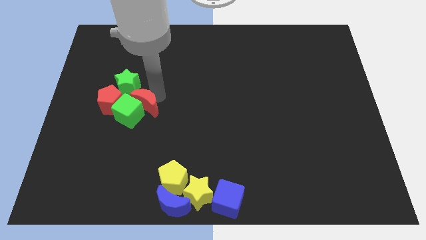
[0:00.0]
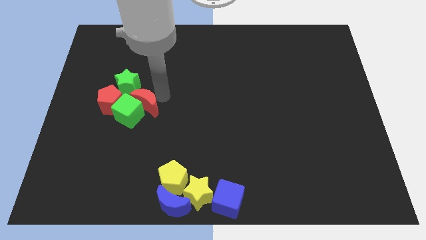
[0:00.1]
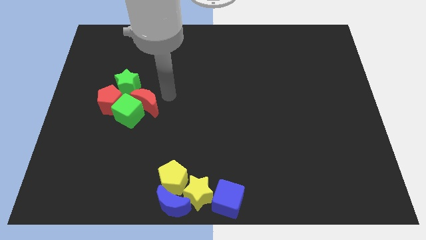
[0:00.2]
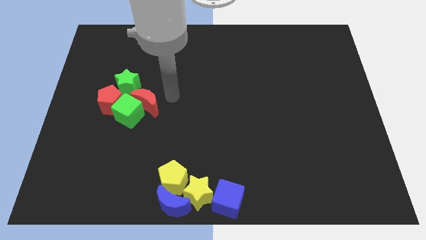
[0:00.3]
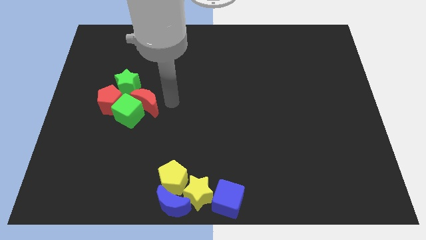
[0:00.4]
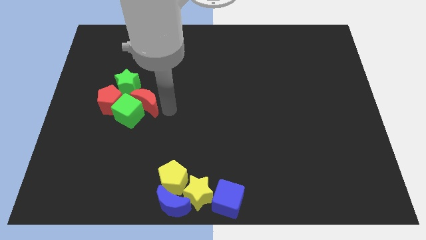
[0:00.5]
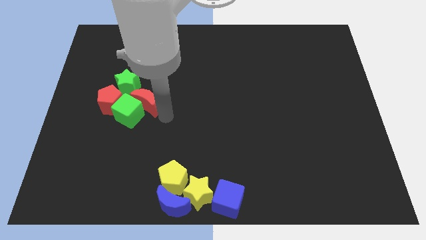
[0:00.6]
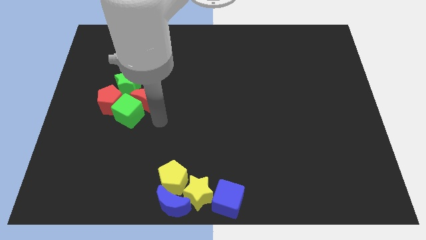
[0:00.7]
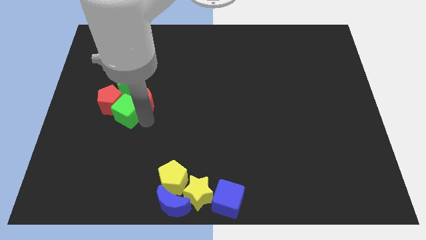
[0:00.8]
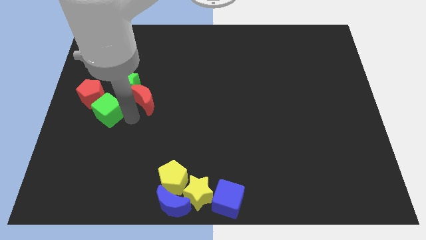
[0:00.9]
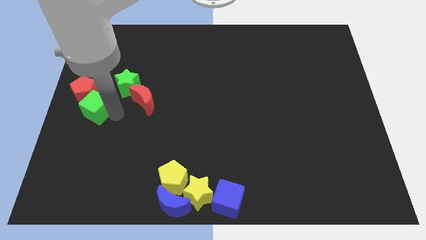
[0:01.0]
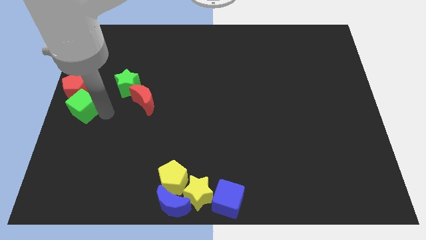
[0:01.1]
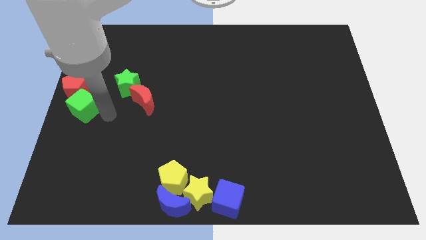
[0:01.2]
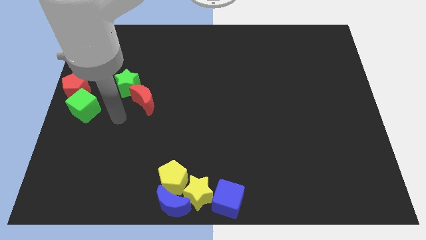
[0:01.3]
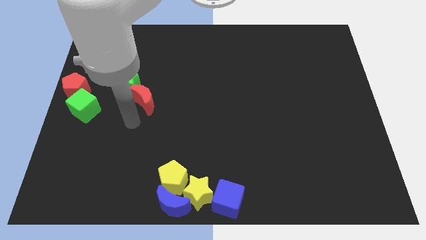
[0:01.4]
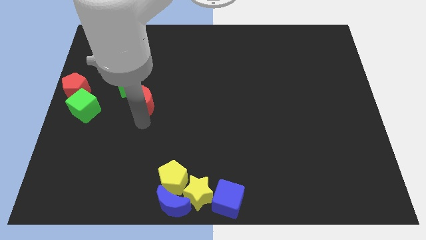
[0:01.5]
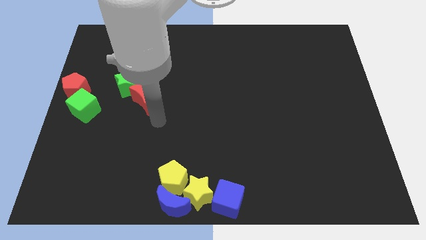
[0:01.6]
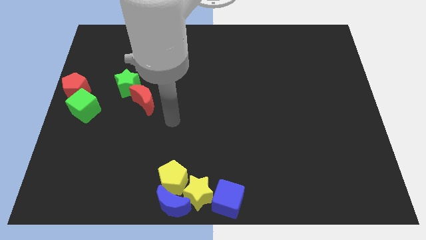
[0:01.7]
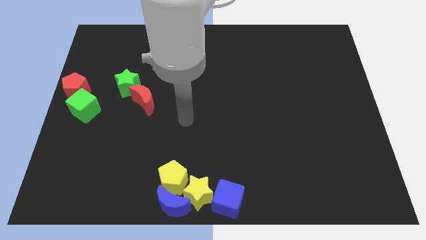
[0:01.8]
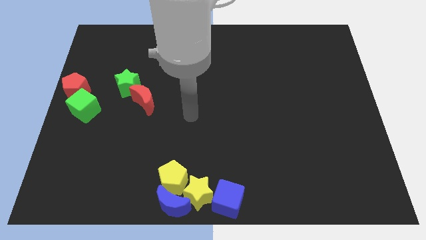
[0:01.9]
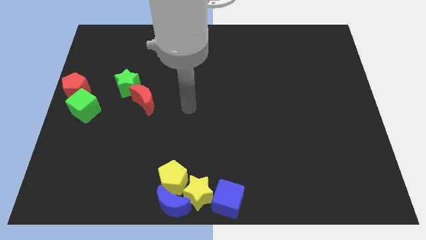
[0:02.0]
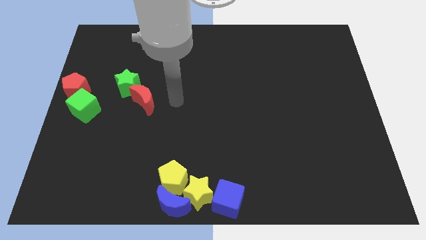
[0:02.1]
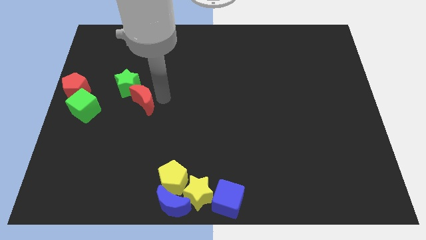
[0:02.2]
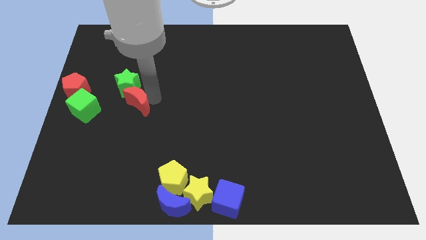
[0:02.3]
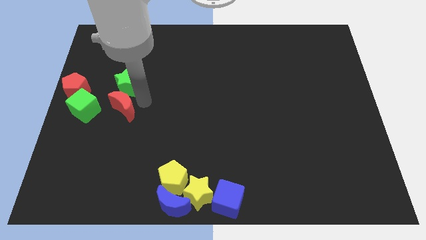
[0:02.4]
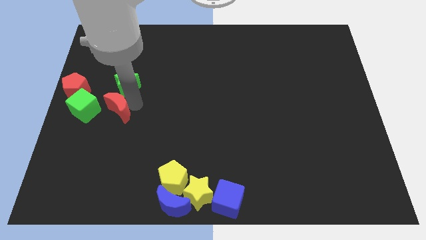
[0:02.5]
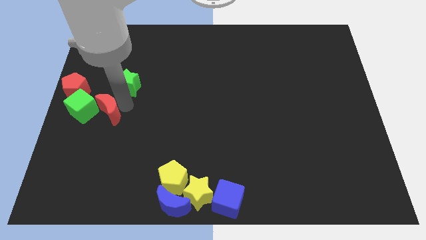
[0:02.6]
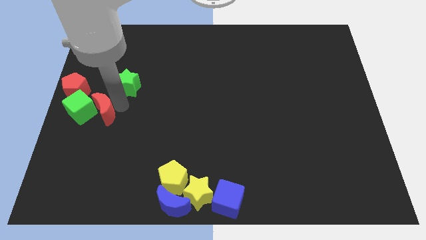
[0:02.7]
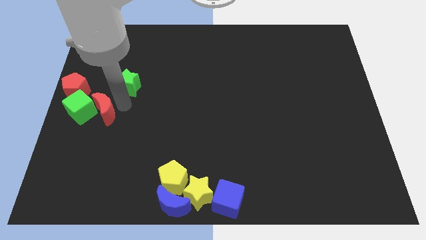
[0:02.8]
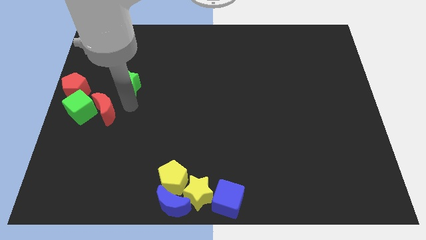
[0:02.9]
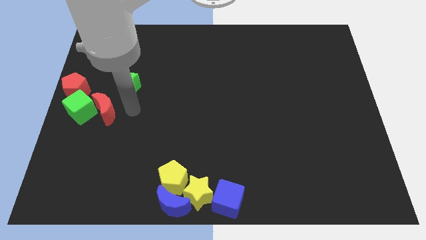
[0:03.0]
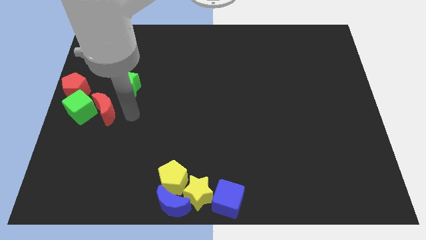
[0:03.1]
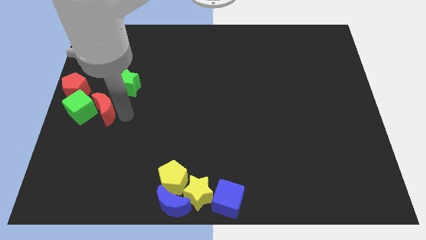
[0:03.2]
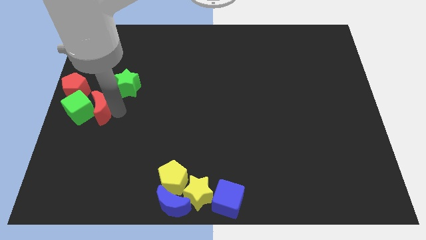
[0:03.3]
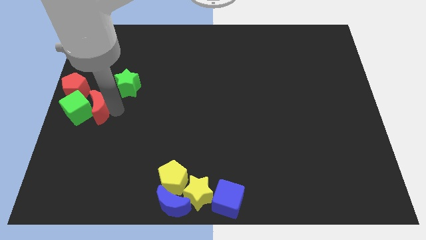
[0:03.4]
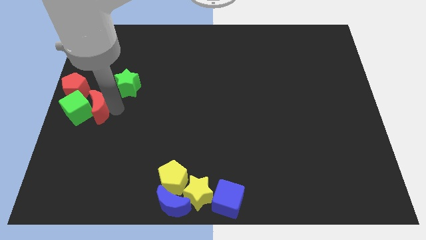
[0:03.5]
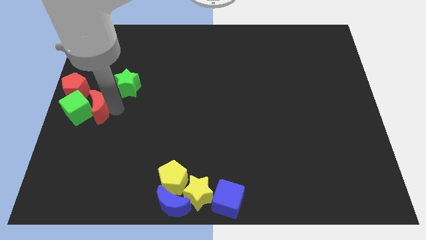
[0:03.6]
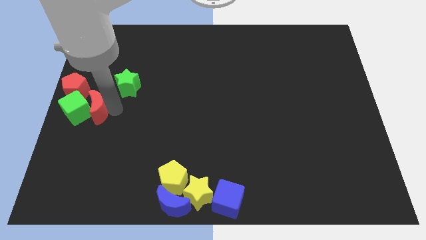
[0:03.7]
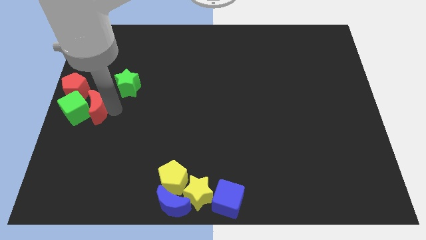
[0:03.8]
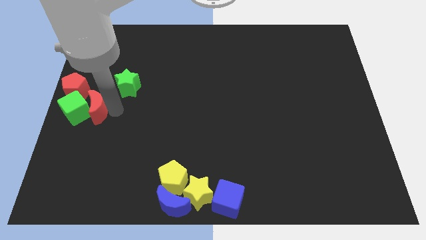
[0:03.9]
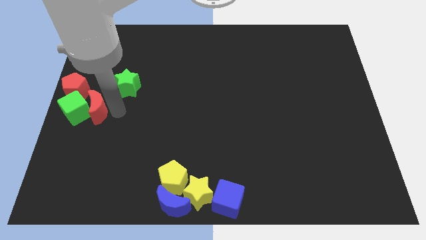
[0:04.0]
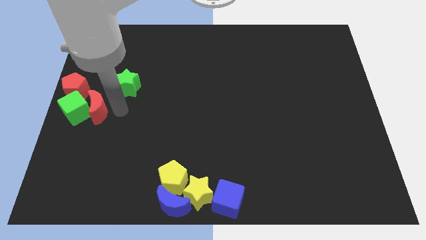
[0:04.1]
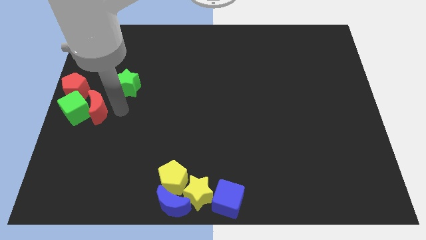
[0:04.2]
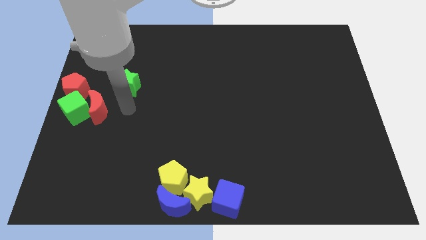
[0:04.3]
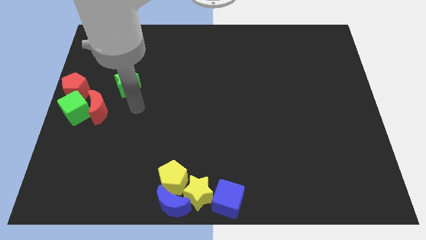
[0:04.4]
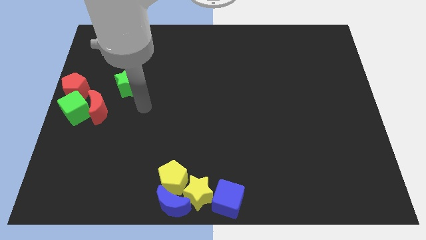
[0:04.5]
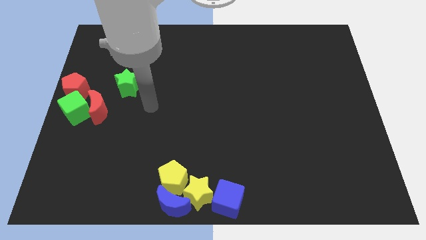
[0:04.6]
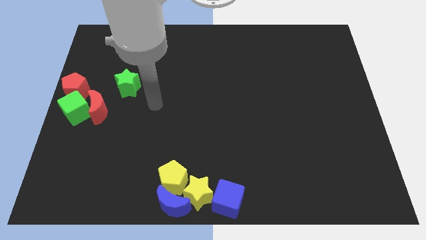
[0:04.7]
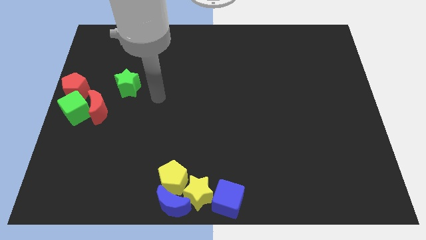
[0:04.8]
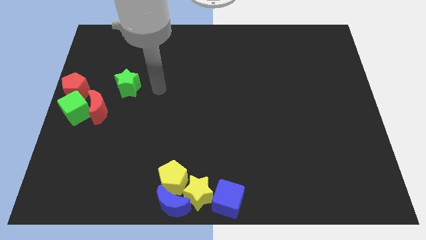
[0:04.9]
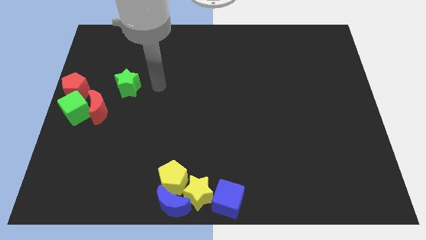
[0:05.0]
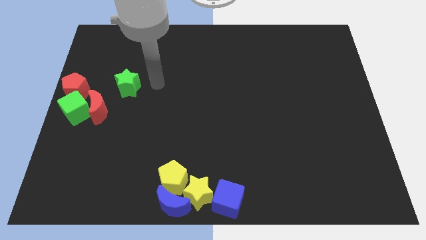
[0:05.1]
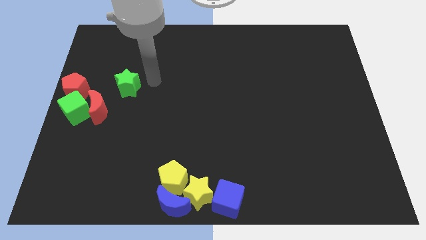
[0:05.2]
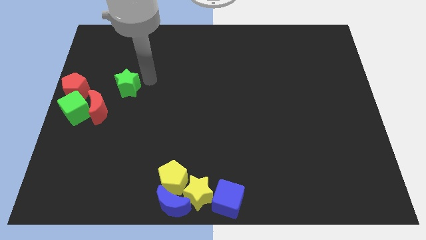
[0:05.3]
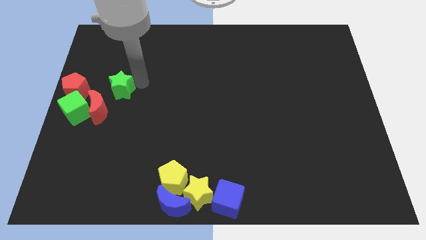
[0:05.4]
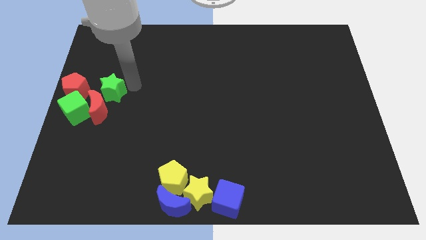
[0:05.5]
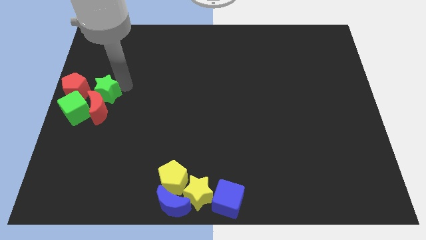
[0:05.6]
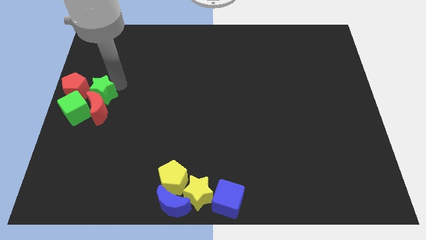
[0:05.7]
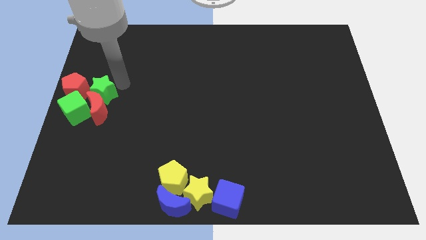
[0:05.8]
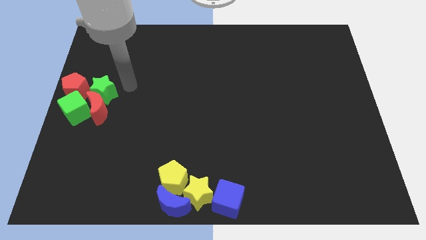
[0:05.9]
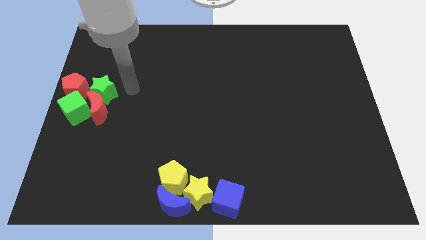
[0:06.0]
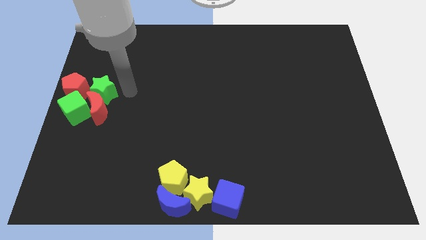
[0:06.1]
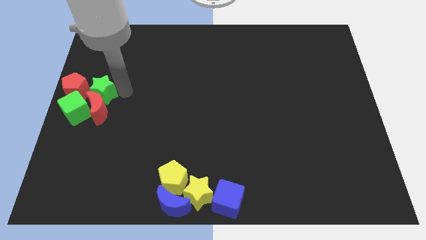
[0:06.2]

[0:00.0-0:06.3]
move both the red blocks and the green blocks towards the center left of the board

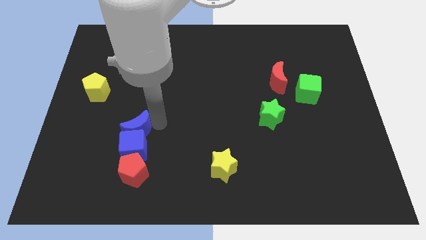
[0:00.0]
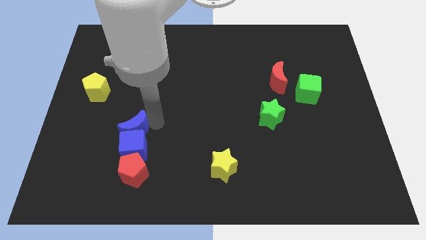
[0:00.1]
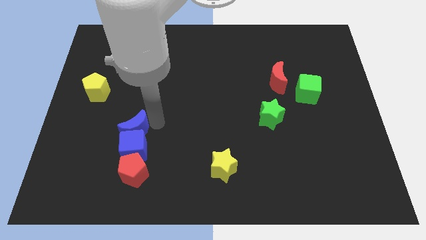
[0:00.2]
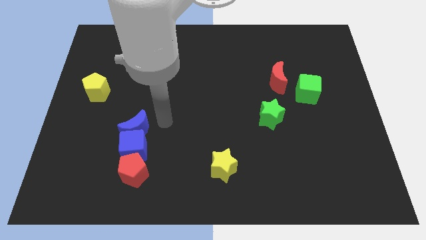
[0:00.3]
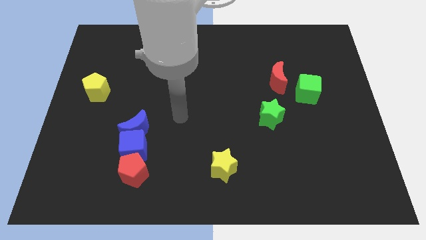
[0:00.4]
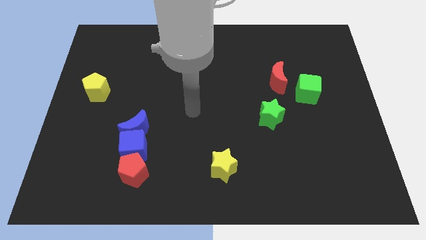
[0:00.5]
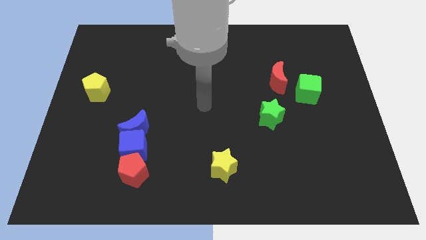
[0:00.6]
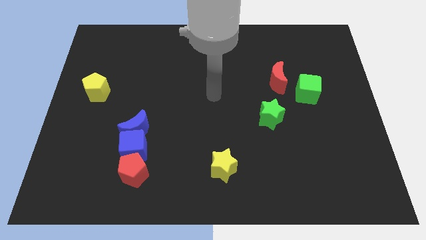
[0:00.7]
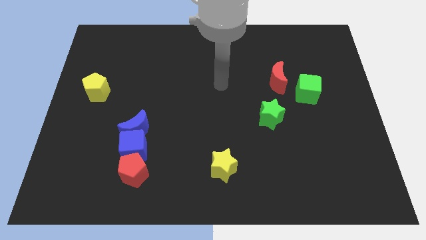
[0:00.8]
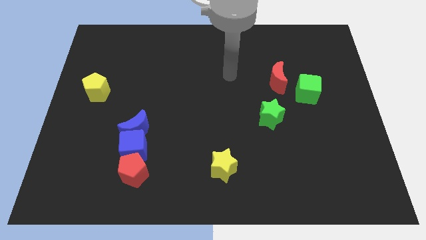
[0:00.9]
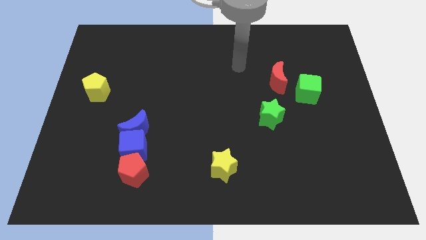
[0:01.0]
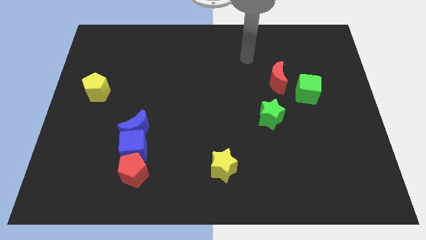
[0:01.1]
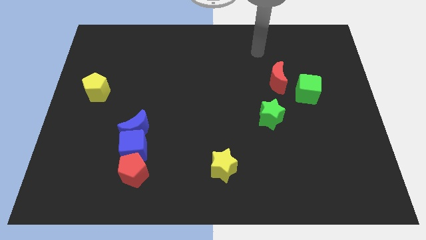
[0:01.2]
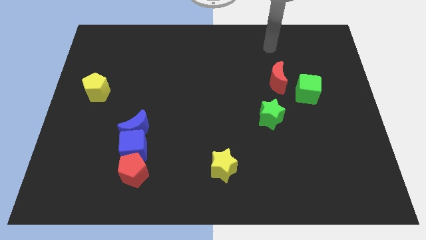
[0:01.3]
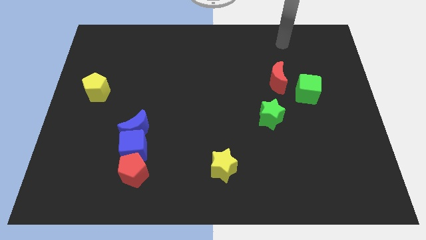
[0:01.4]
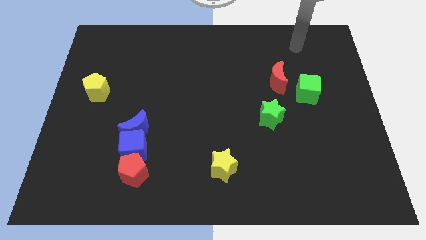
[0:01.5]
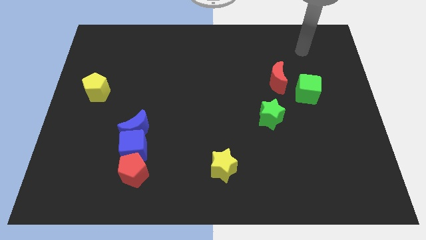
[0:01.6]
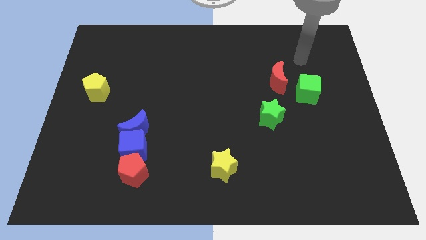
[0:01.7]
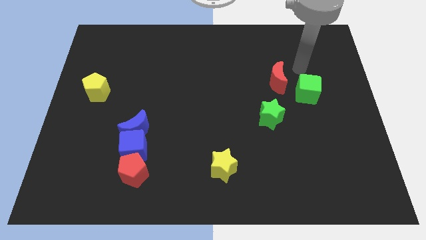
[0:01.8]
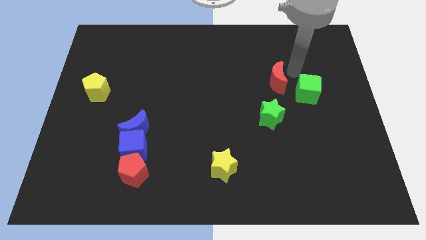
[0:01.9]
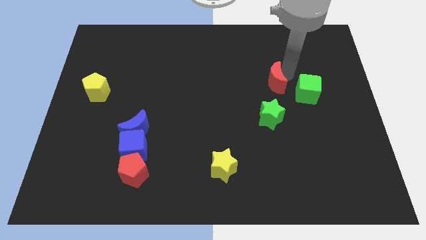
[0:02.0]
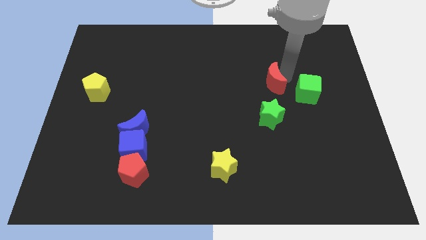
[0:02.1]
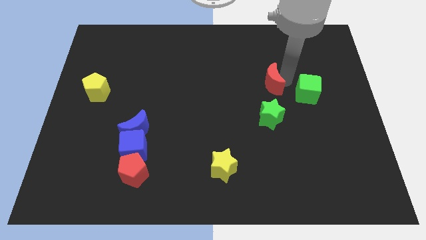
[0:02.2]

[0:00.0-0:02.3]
point your arm close to red moon

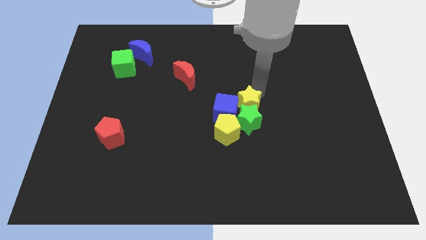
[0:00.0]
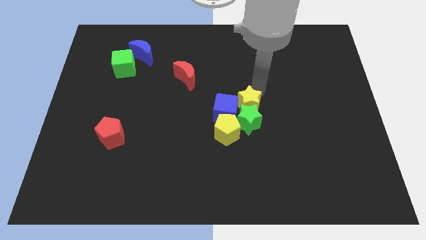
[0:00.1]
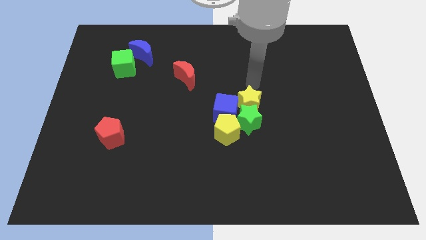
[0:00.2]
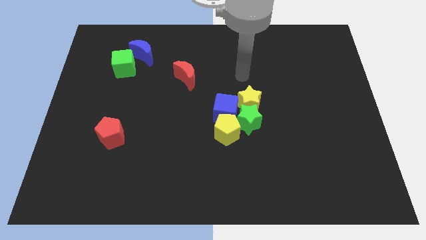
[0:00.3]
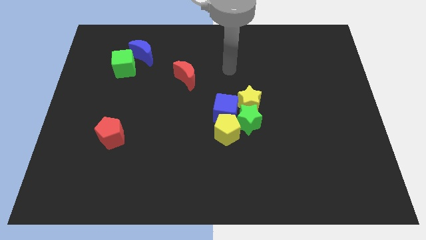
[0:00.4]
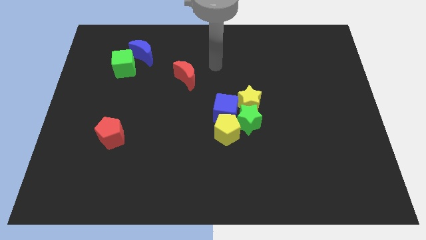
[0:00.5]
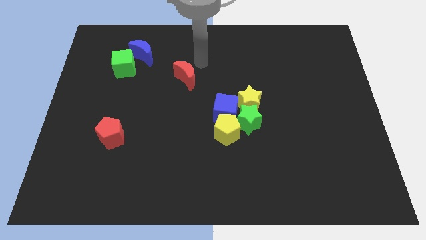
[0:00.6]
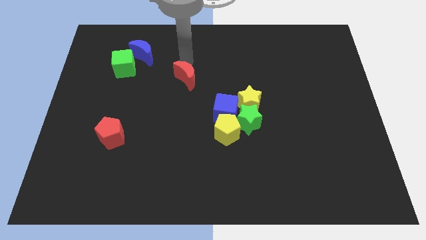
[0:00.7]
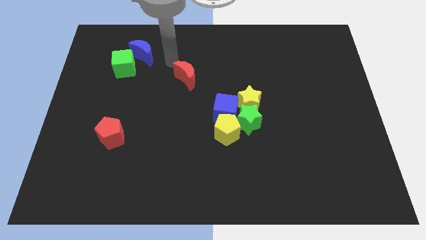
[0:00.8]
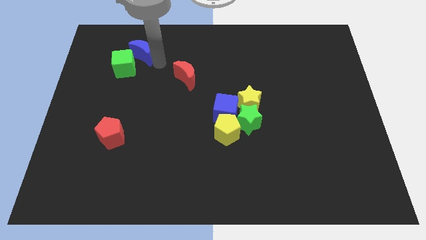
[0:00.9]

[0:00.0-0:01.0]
place your arm at the top of the red crescent
